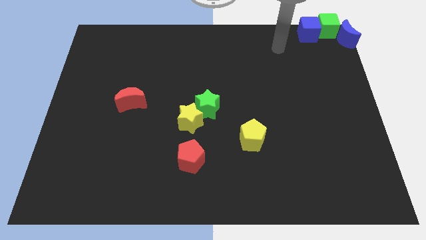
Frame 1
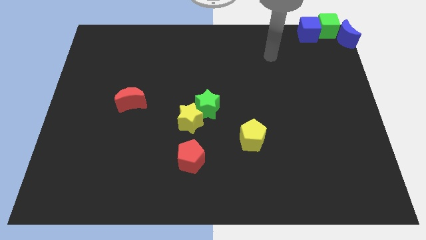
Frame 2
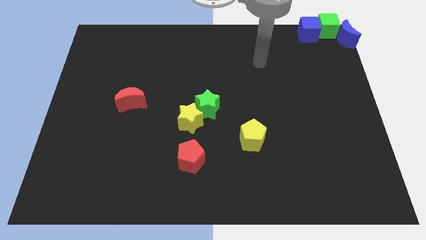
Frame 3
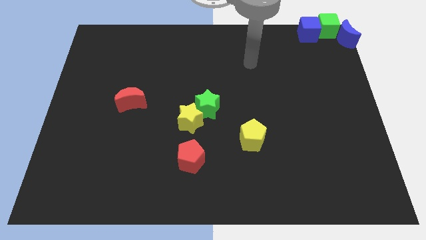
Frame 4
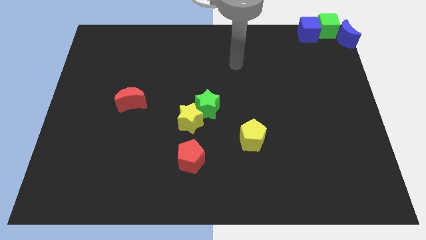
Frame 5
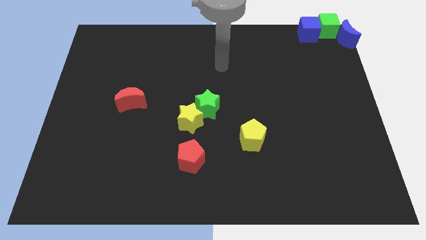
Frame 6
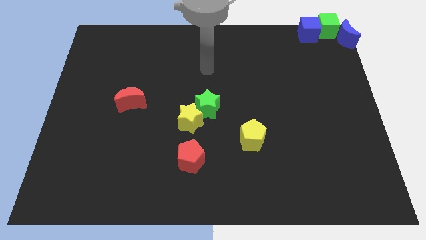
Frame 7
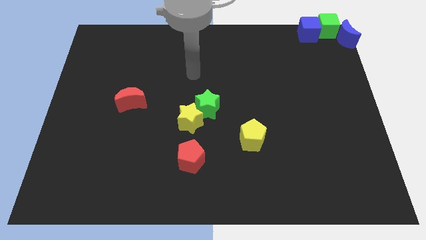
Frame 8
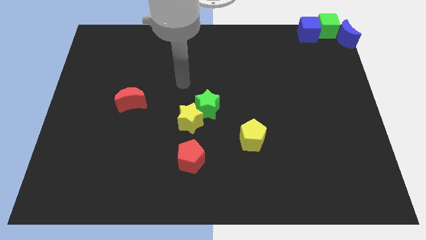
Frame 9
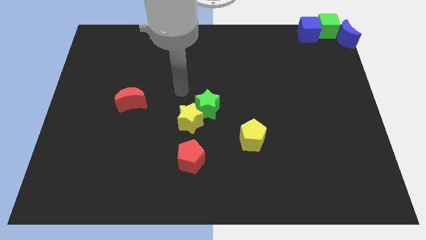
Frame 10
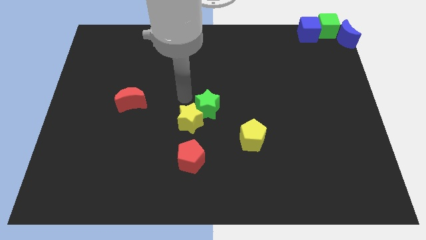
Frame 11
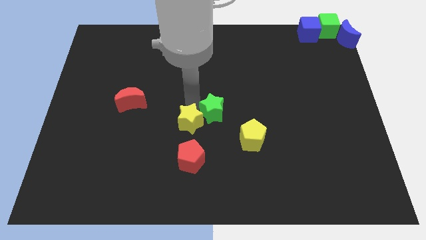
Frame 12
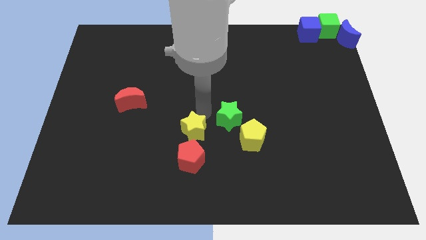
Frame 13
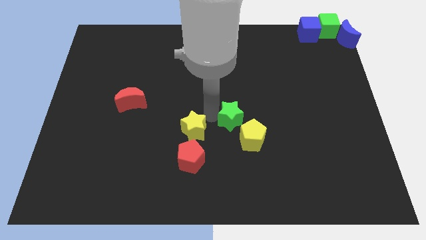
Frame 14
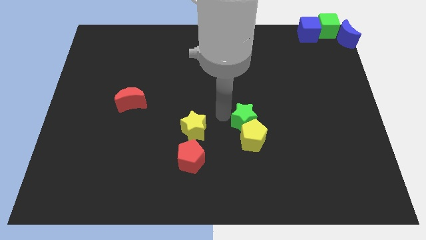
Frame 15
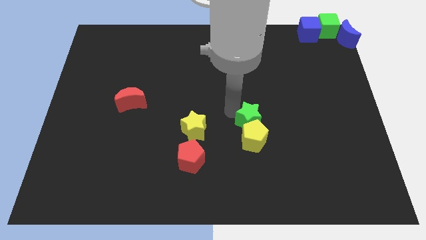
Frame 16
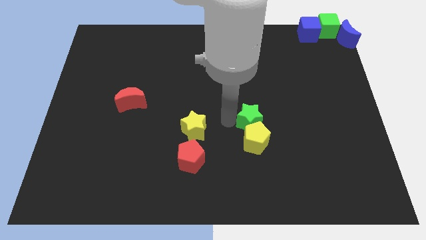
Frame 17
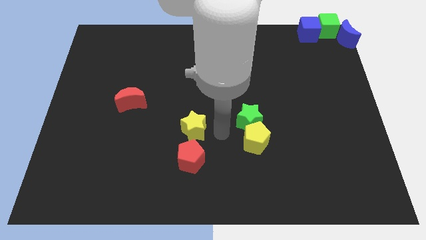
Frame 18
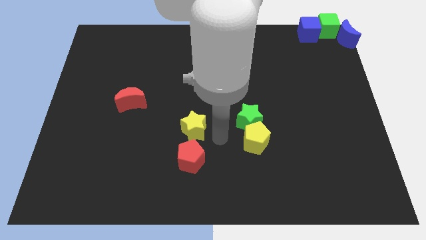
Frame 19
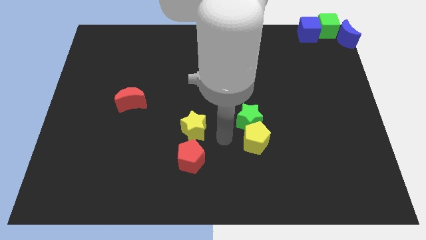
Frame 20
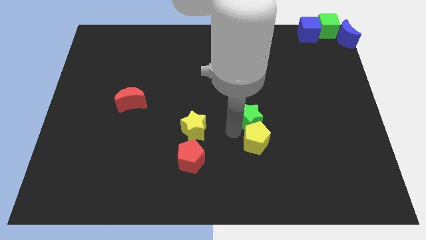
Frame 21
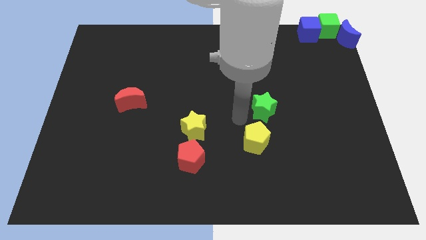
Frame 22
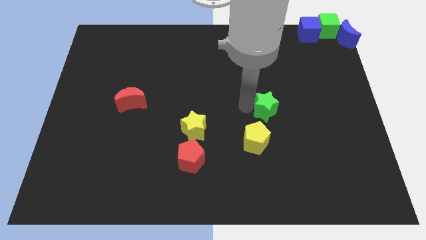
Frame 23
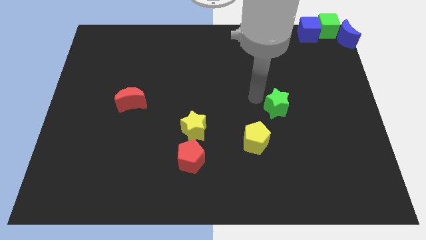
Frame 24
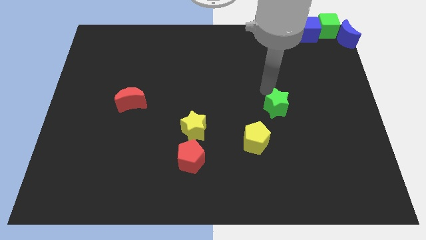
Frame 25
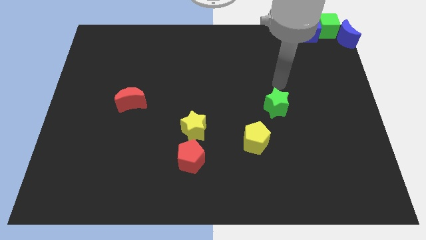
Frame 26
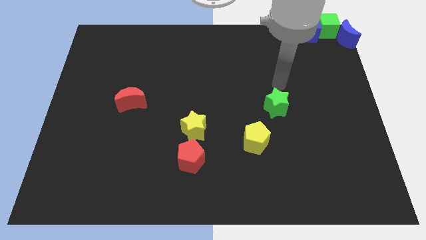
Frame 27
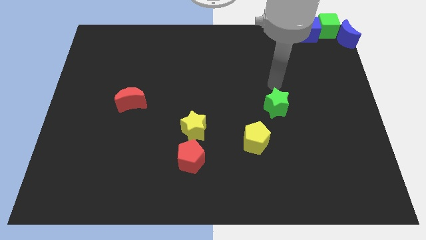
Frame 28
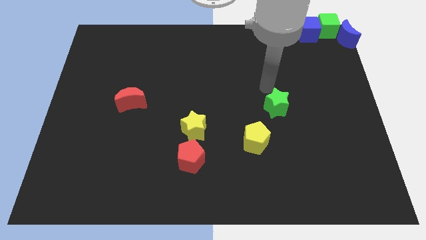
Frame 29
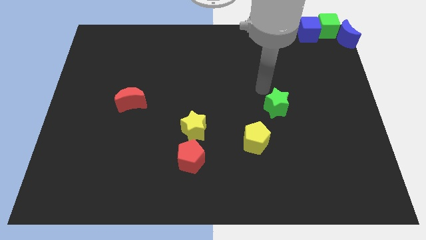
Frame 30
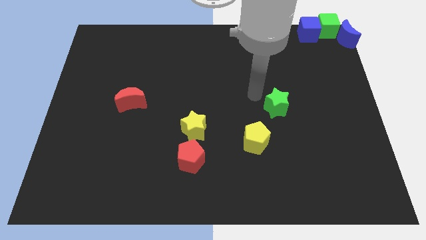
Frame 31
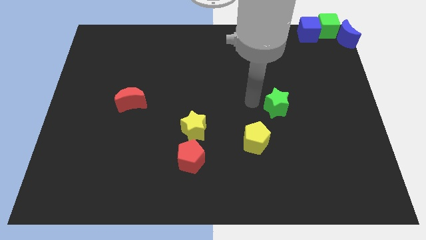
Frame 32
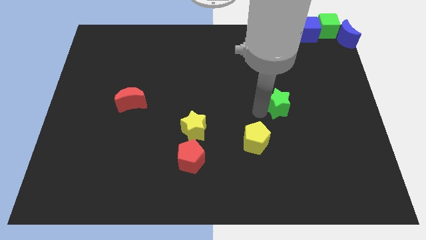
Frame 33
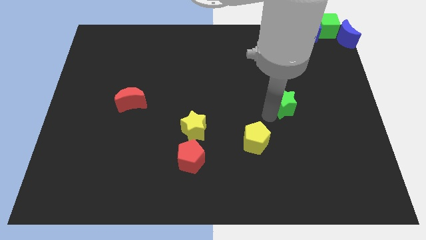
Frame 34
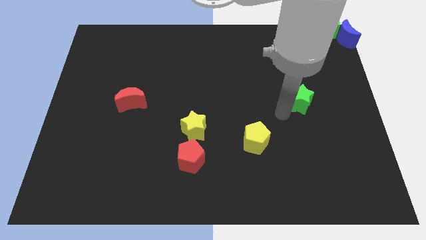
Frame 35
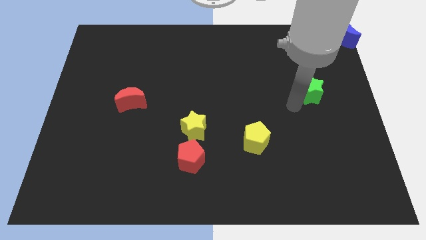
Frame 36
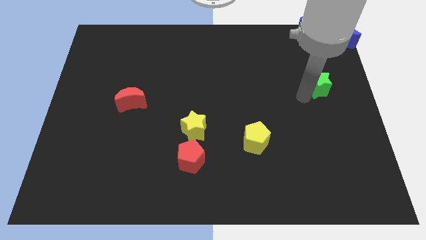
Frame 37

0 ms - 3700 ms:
push the green star diagonally on the top right side of the yellow pentagon

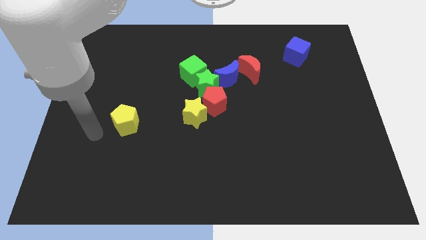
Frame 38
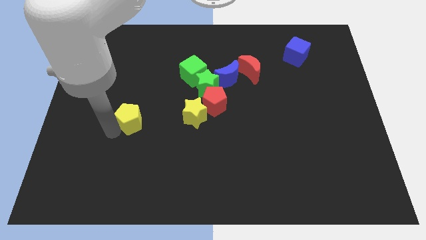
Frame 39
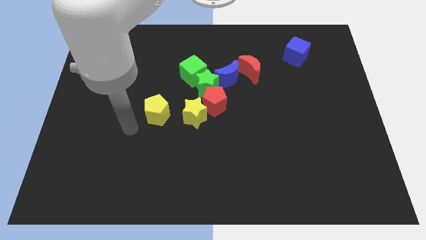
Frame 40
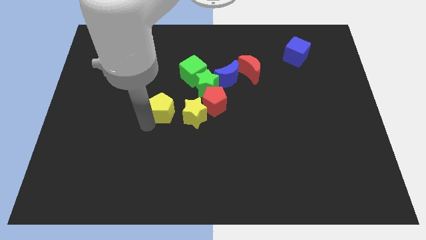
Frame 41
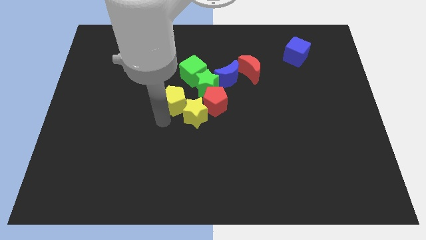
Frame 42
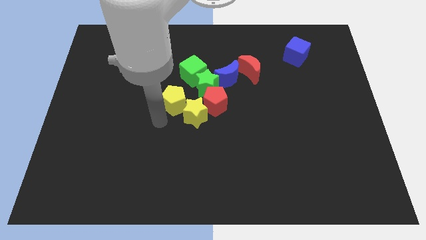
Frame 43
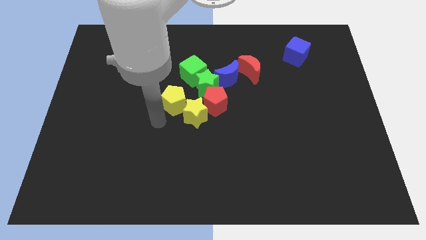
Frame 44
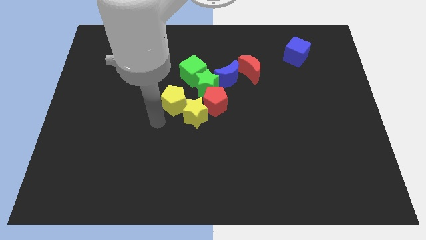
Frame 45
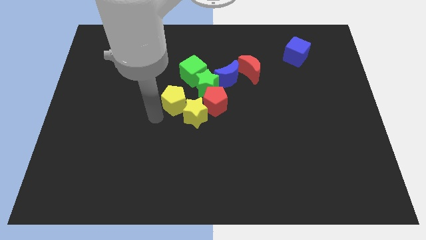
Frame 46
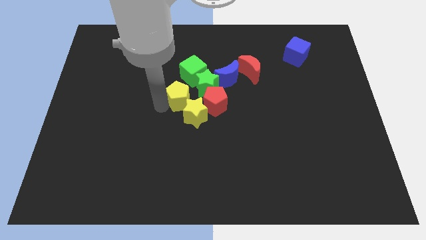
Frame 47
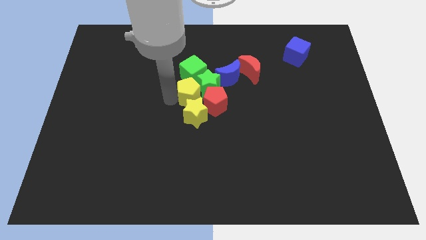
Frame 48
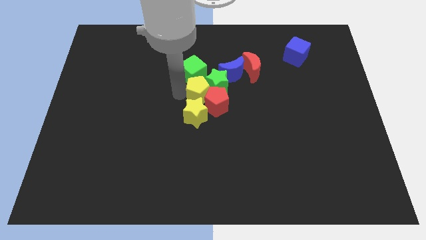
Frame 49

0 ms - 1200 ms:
place the yellow pentagon at the top of yellow star

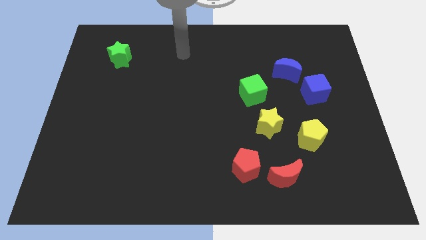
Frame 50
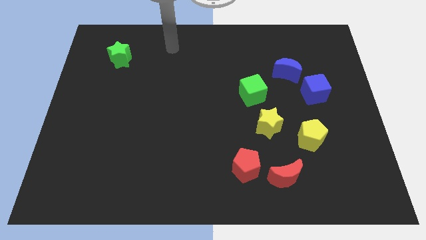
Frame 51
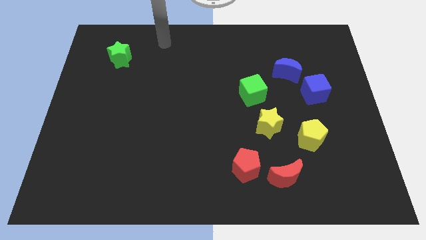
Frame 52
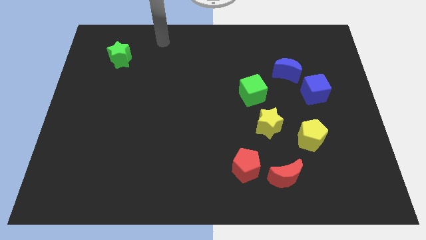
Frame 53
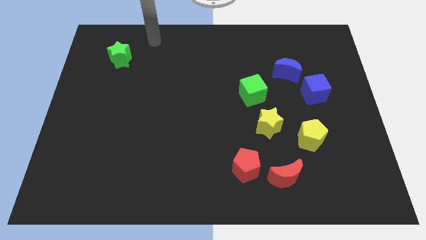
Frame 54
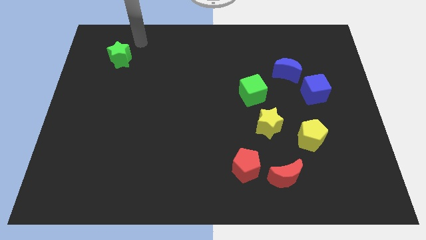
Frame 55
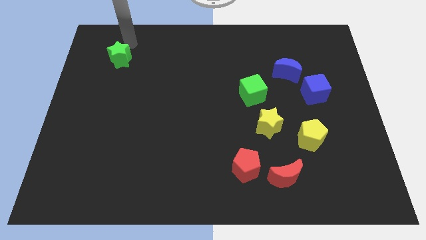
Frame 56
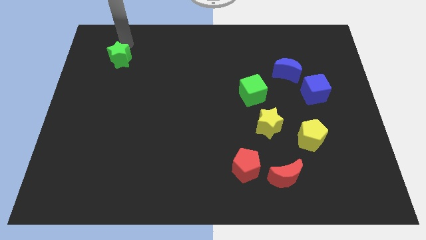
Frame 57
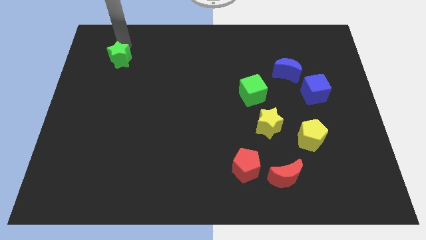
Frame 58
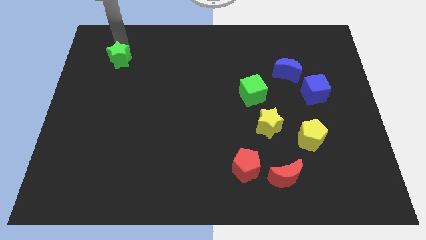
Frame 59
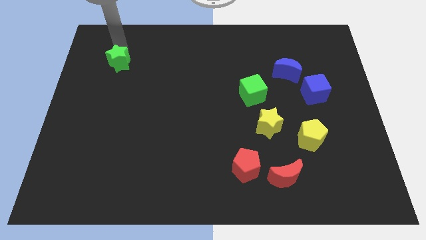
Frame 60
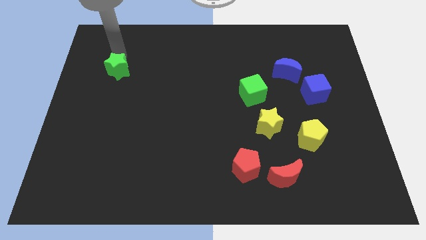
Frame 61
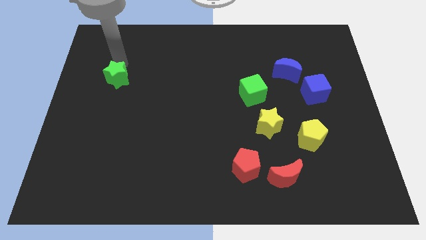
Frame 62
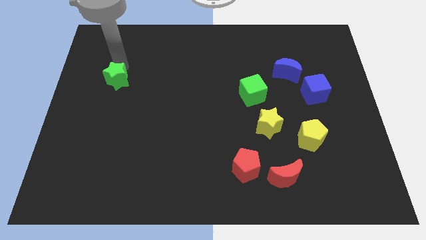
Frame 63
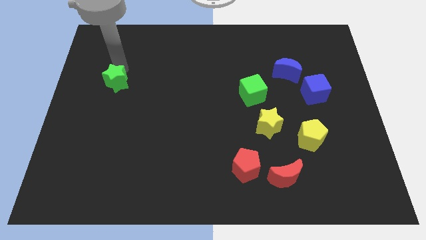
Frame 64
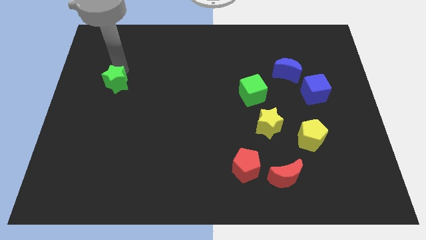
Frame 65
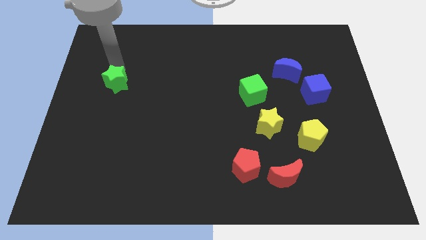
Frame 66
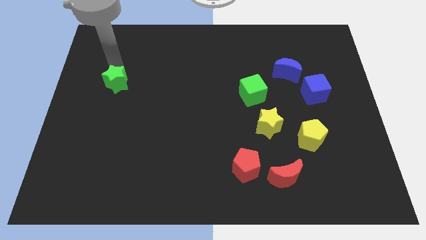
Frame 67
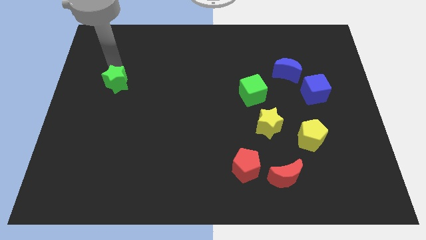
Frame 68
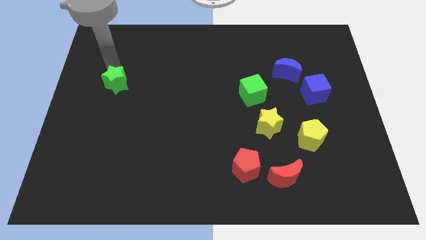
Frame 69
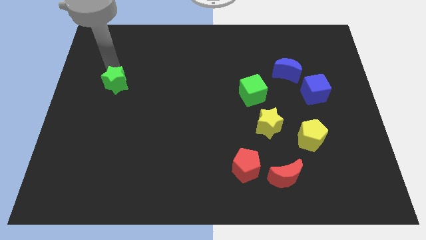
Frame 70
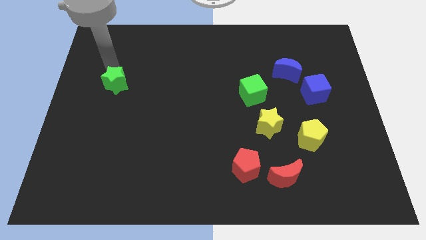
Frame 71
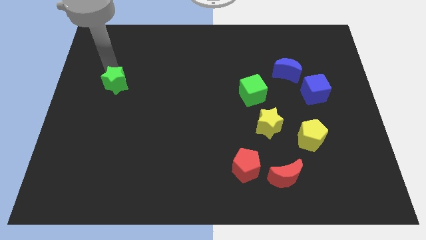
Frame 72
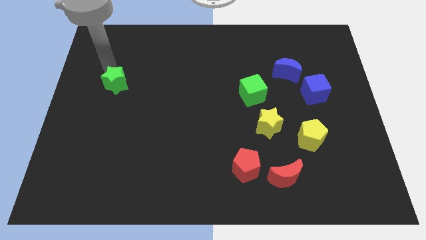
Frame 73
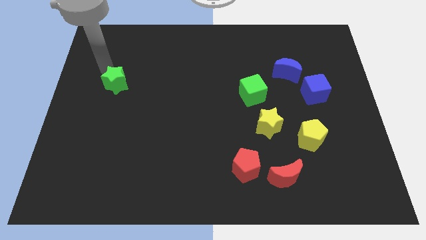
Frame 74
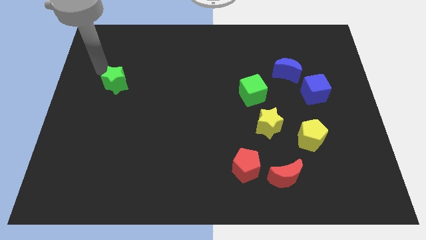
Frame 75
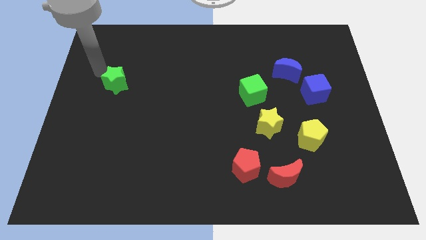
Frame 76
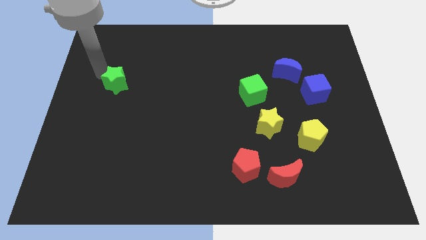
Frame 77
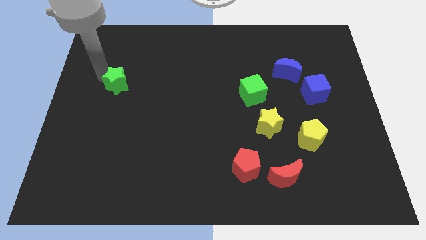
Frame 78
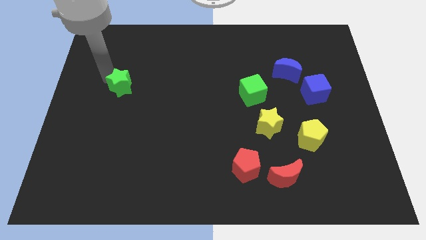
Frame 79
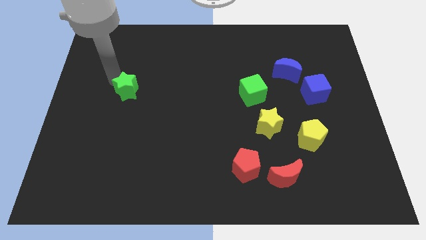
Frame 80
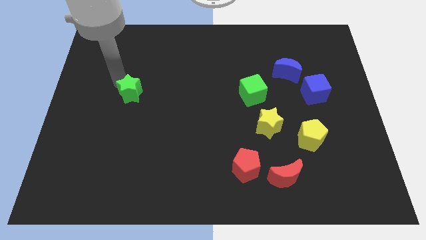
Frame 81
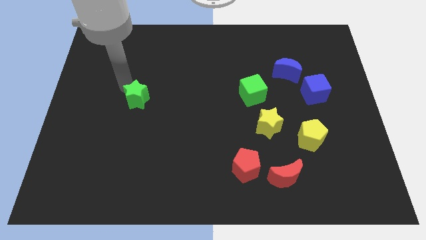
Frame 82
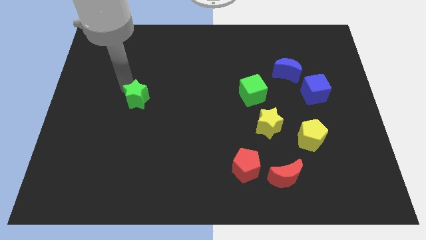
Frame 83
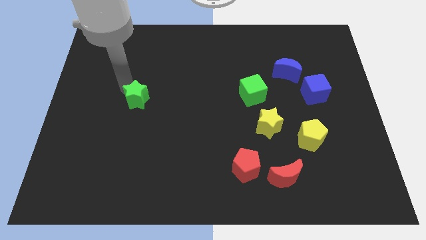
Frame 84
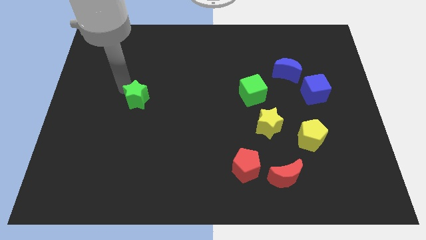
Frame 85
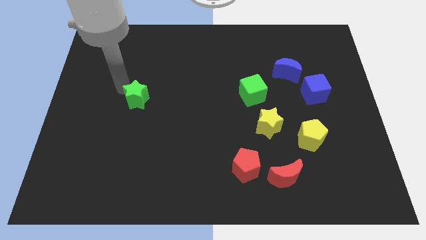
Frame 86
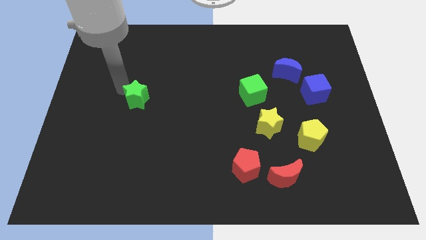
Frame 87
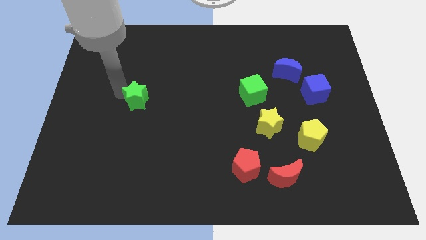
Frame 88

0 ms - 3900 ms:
push the green star to the horizontal left of the green cube

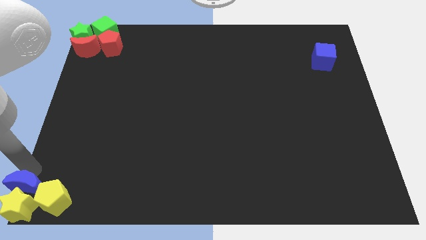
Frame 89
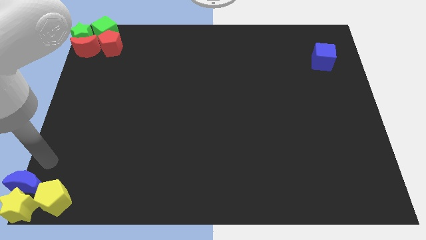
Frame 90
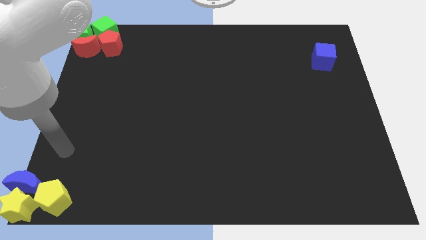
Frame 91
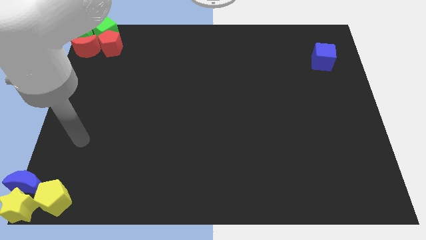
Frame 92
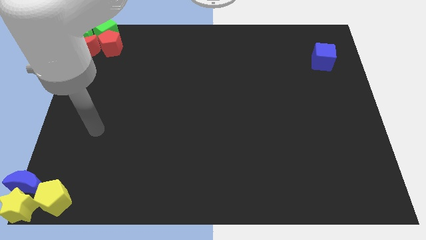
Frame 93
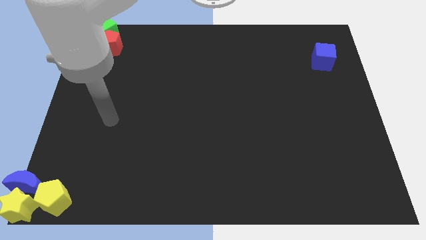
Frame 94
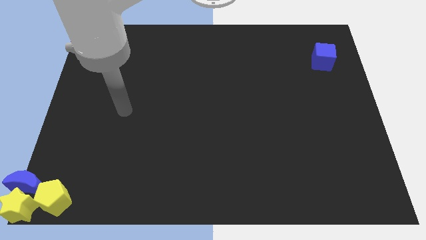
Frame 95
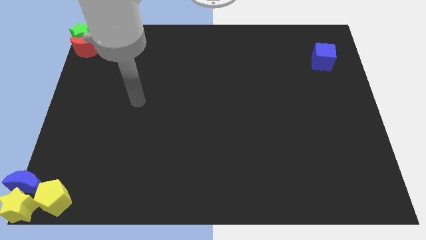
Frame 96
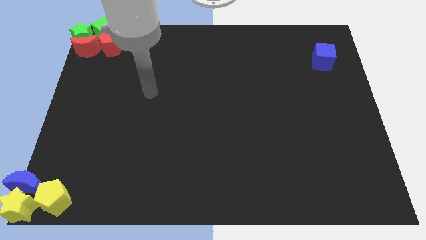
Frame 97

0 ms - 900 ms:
move the arm away from the blue moon
